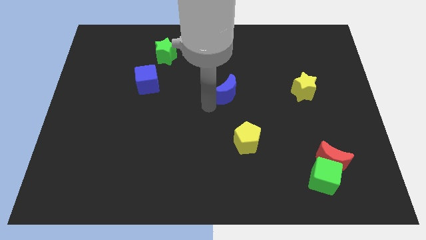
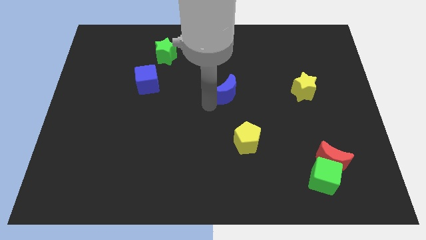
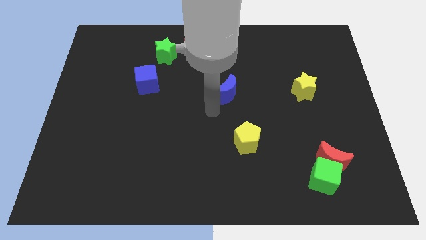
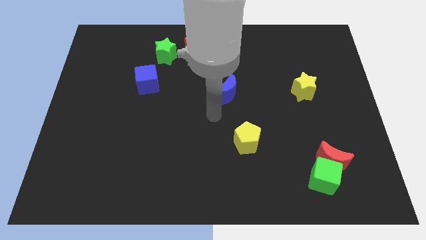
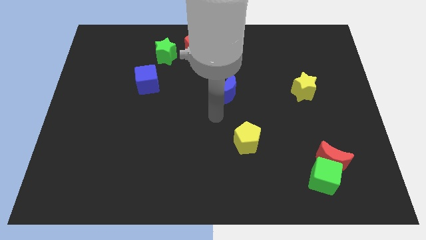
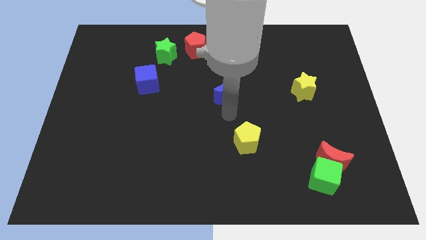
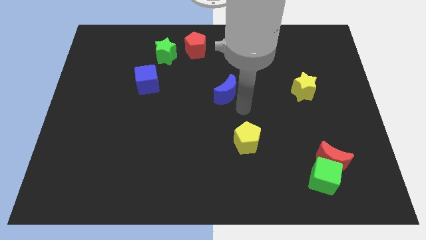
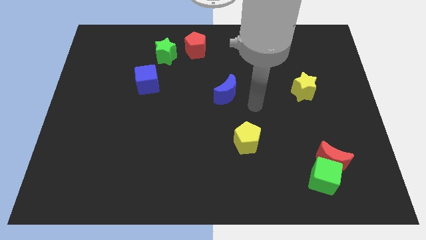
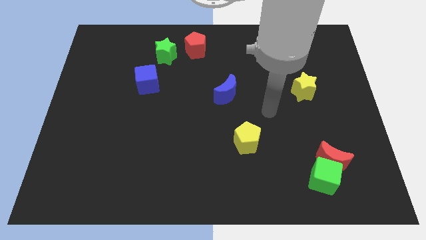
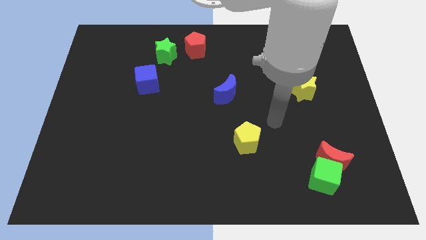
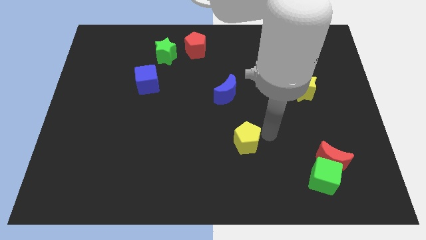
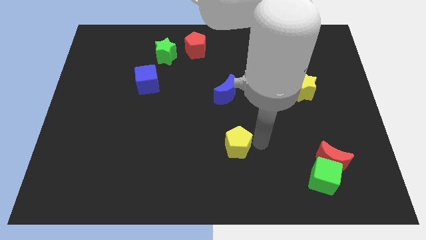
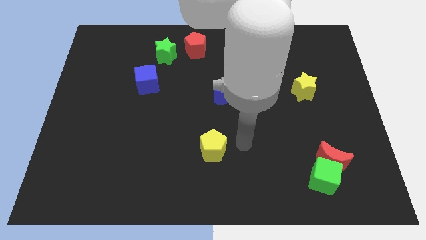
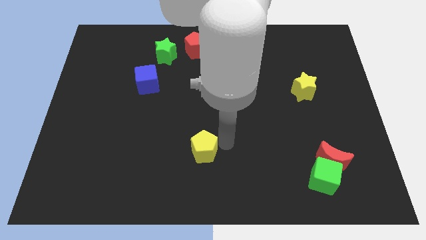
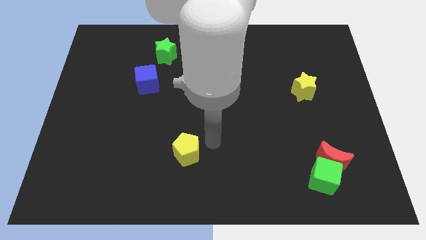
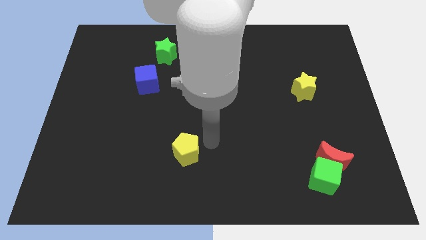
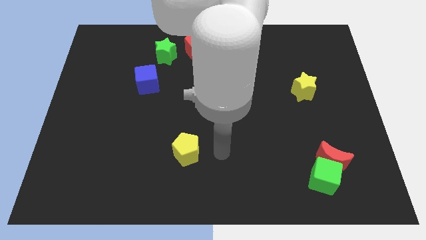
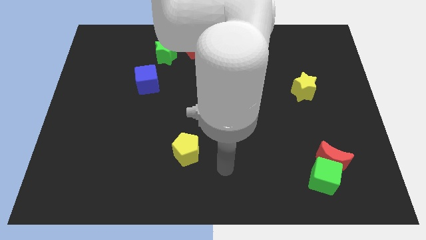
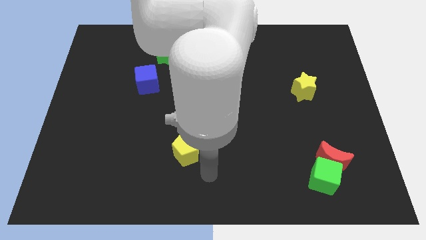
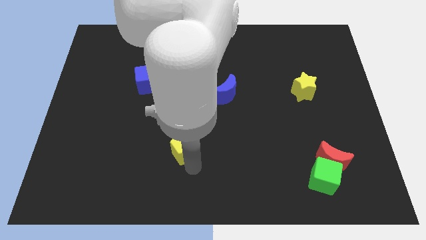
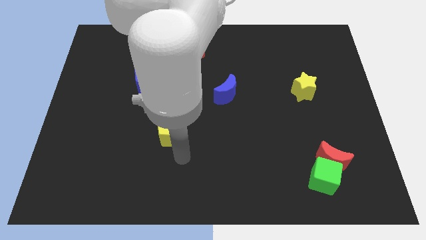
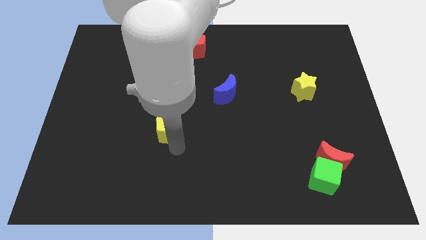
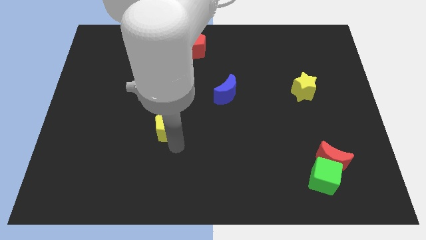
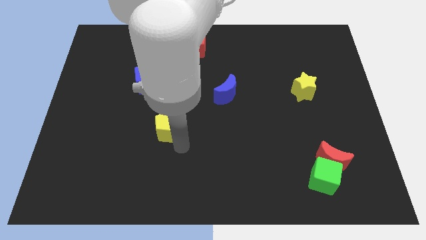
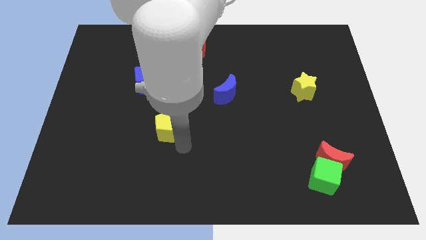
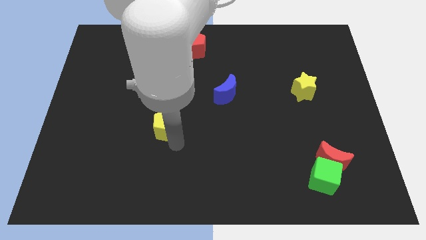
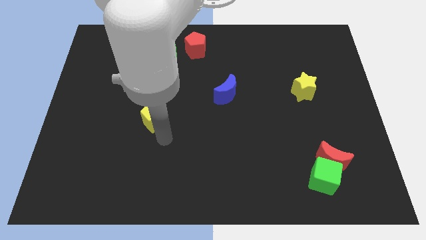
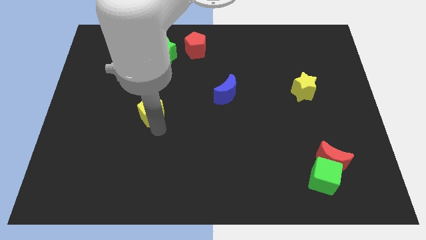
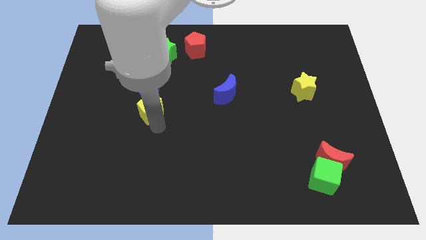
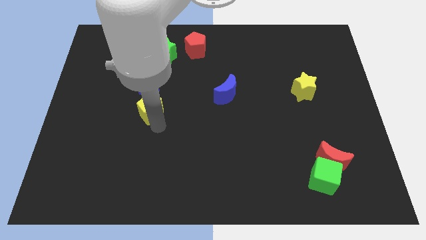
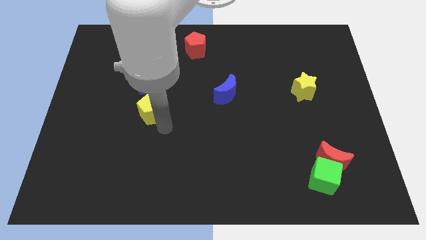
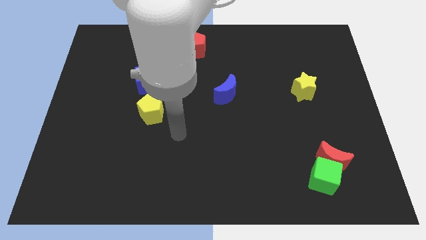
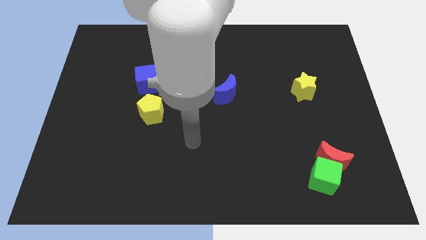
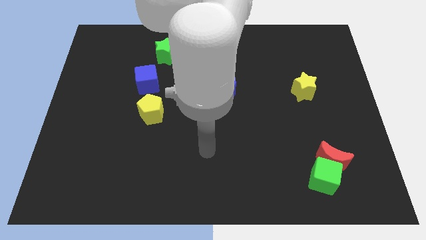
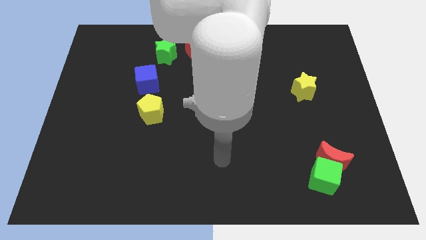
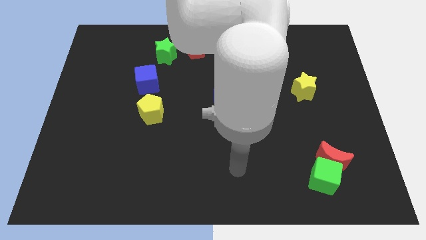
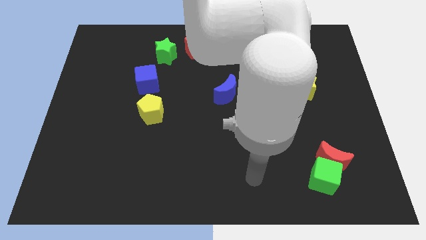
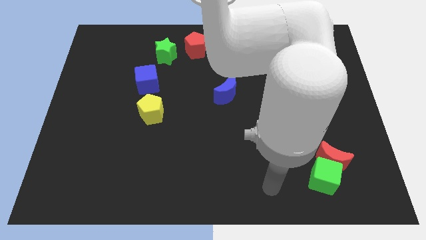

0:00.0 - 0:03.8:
move yellow pentagon below blue cube

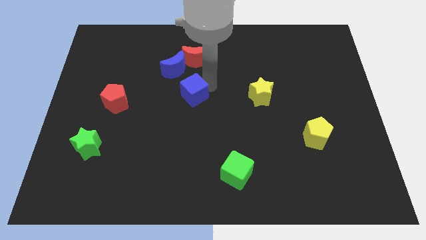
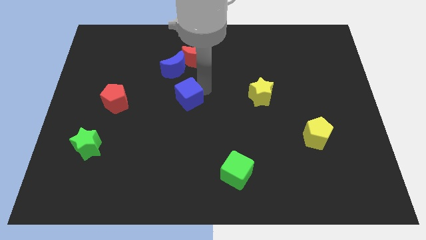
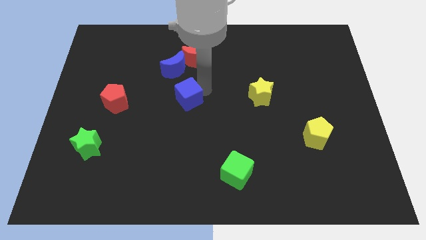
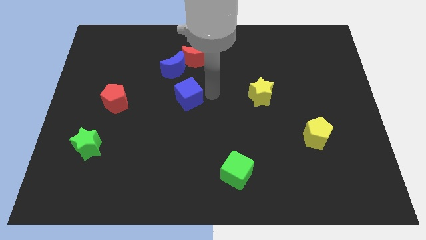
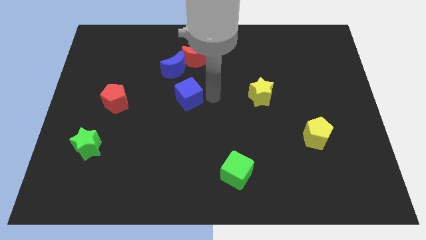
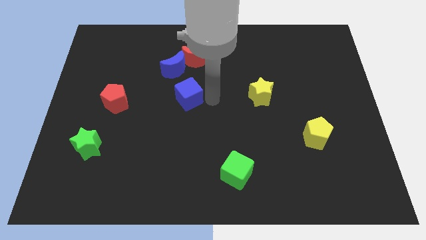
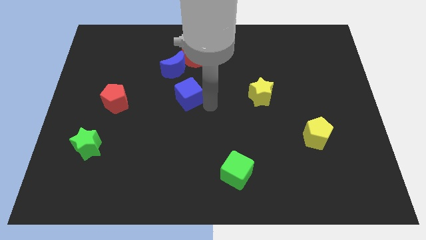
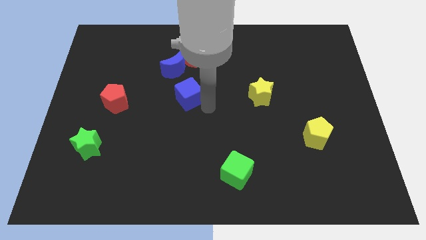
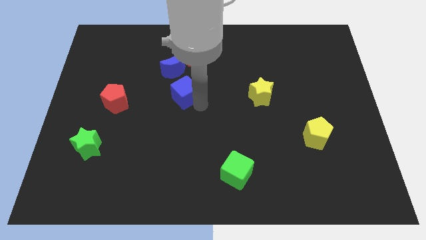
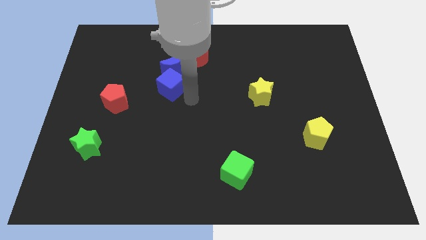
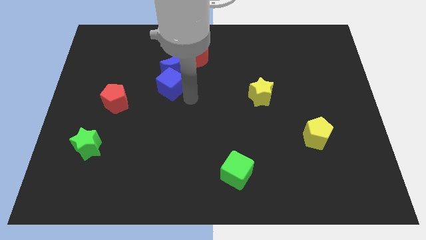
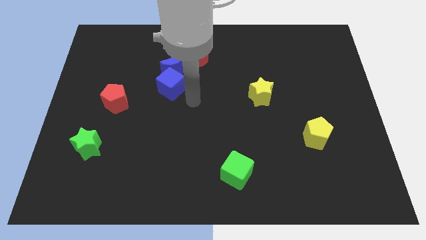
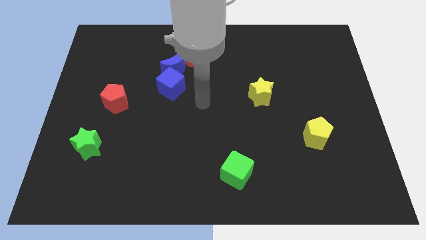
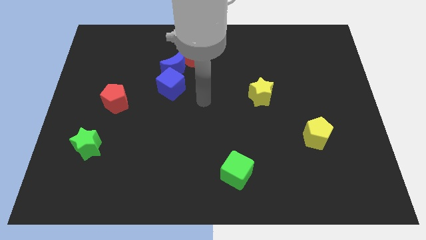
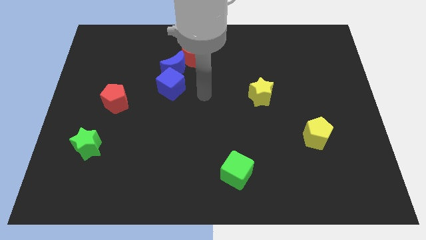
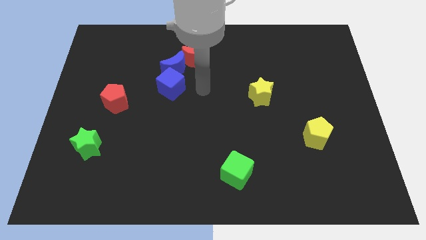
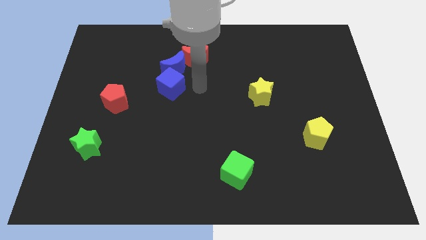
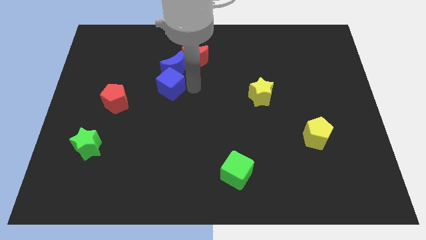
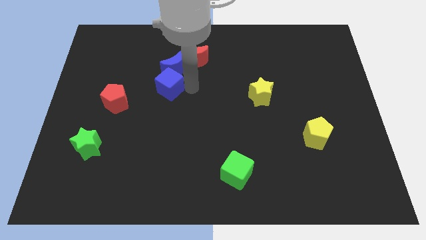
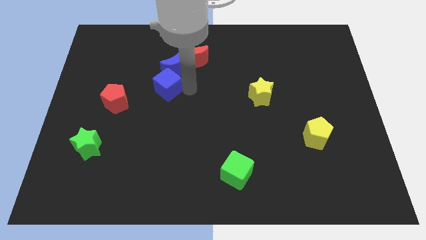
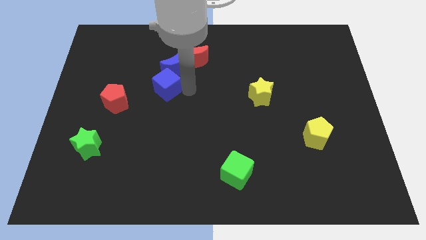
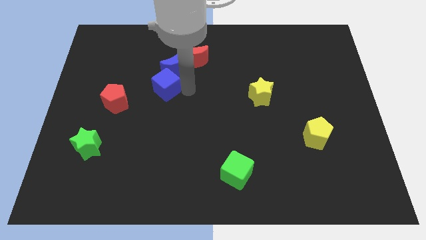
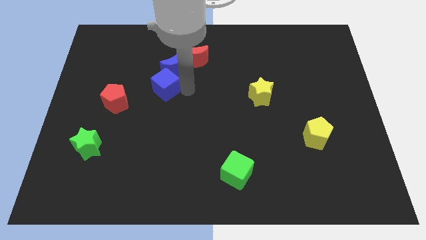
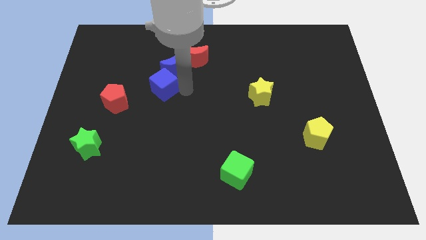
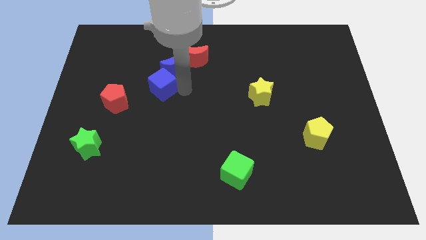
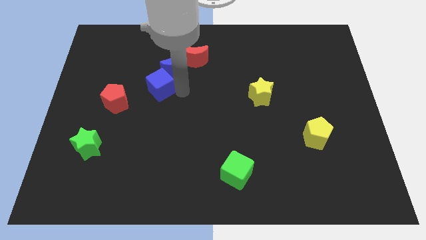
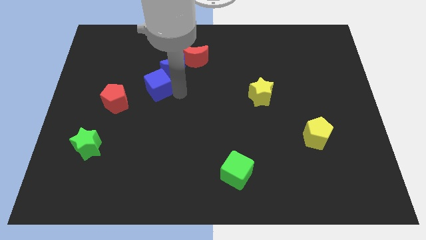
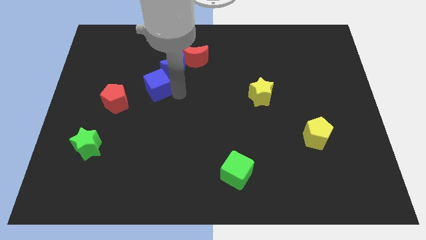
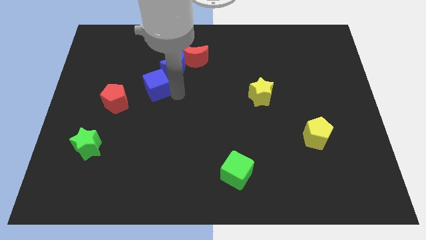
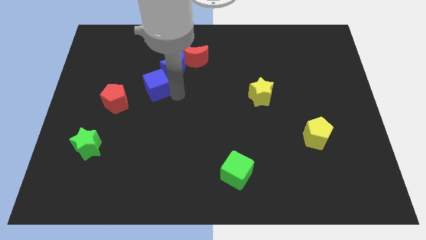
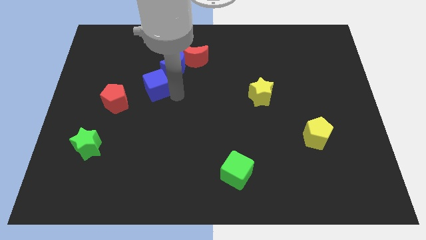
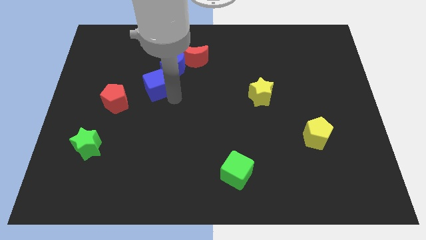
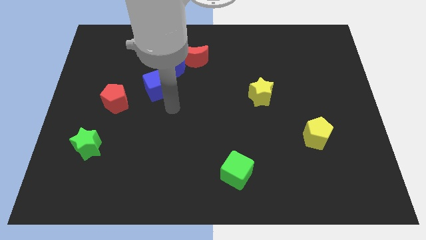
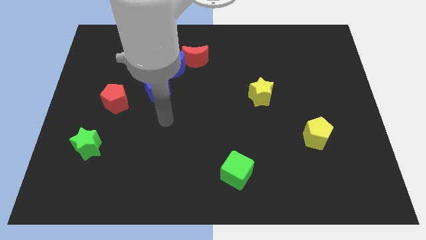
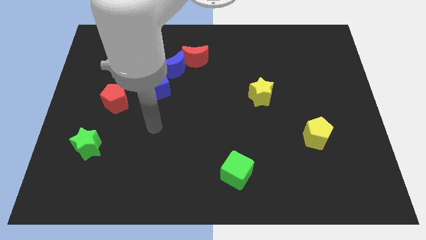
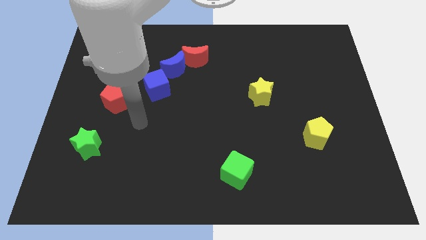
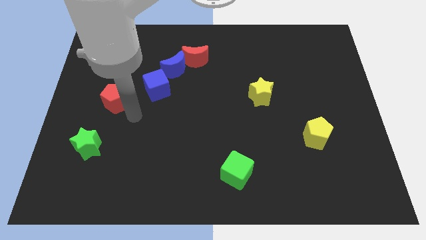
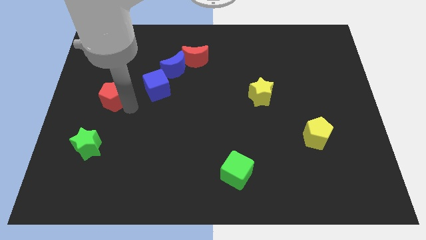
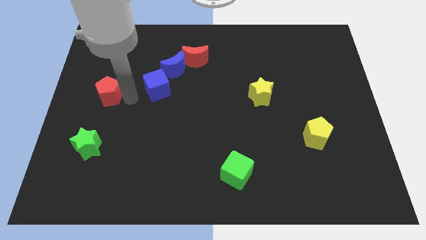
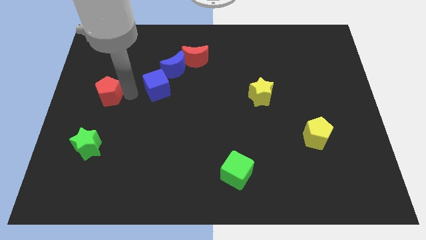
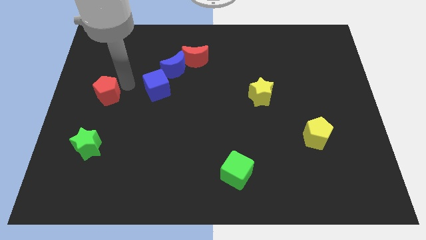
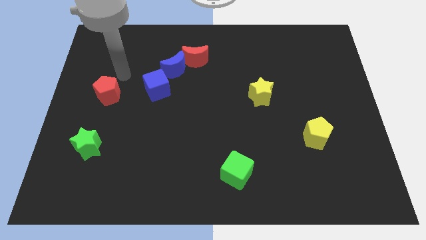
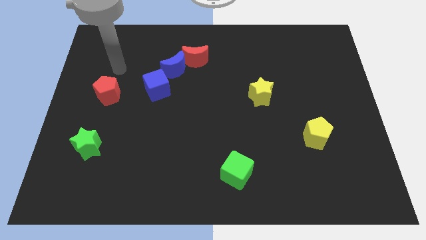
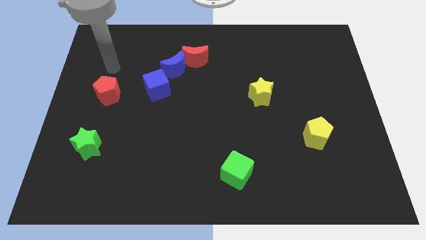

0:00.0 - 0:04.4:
push the blue cube towards the red pentagon

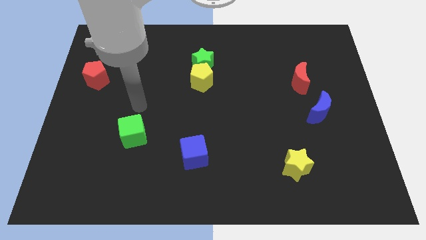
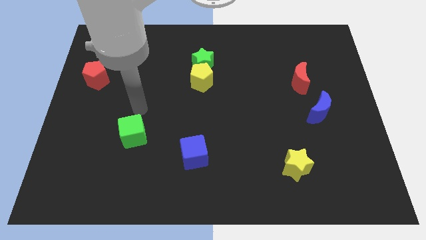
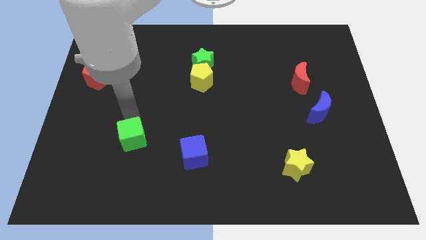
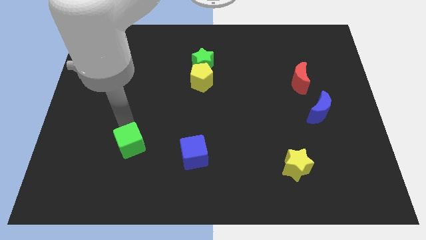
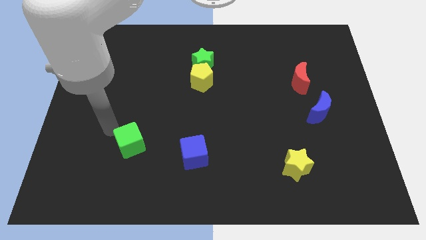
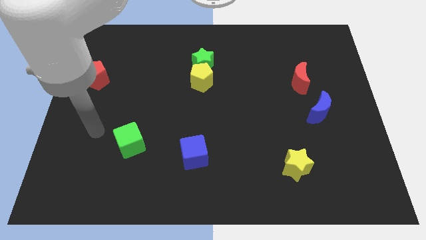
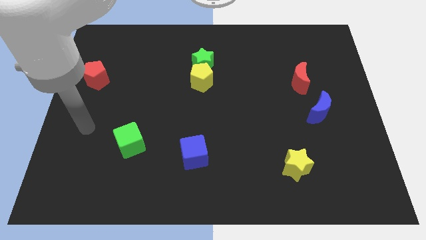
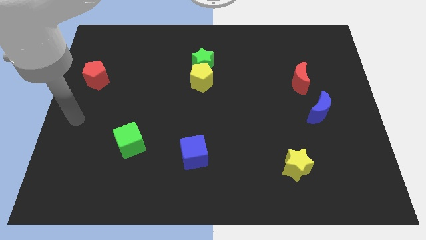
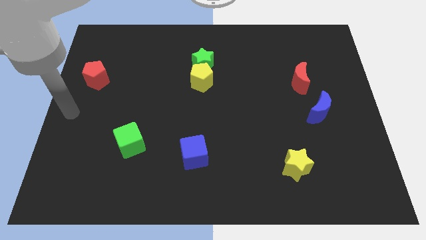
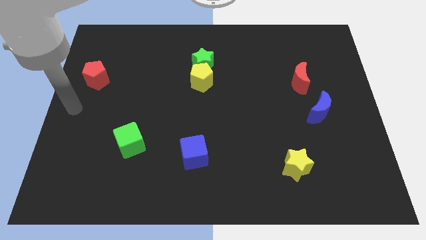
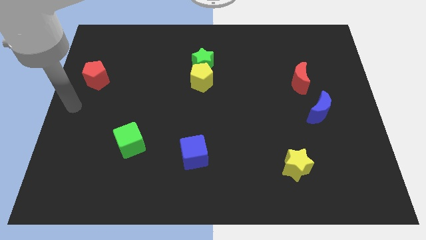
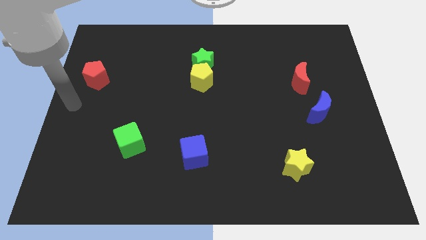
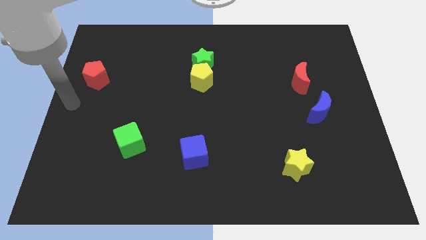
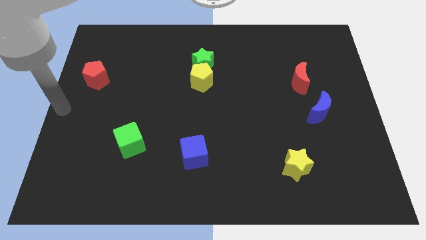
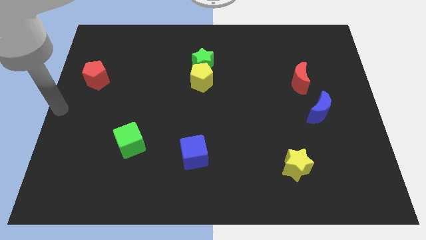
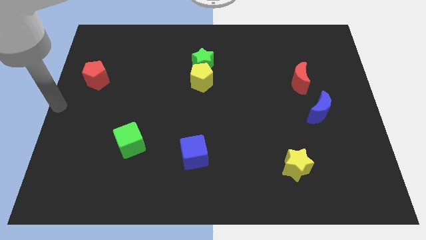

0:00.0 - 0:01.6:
push the green cube downwards slightly
